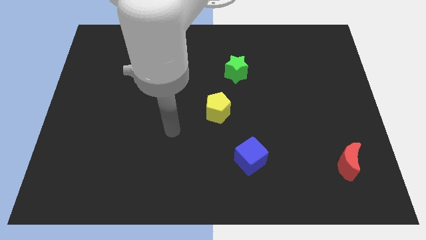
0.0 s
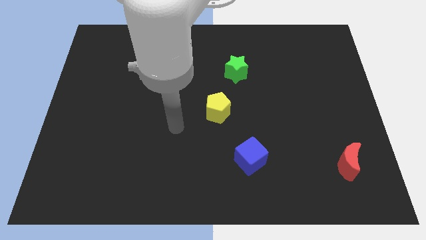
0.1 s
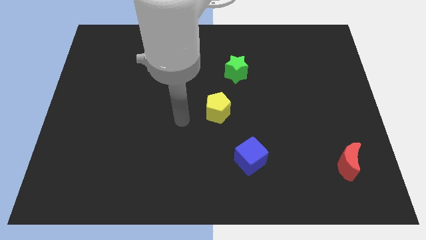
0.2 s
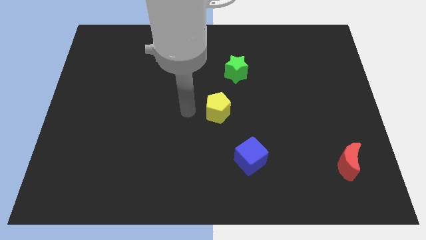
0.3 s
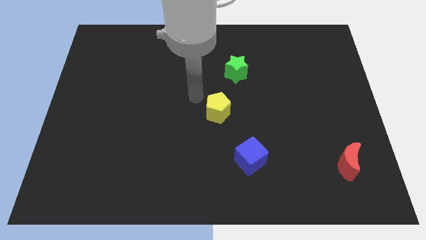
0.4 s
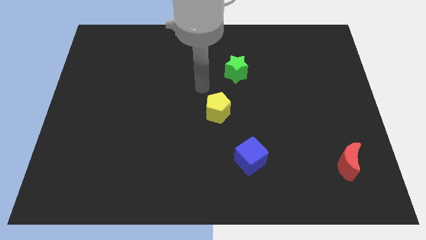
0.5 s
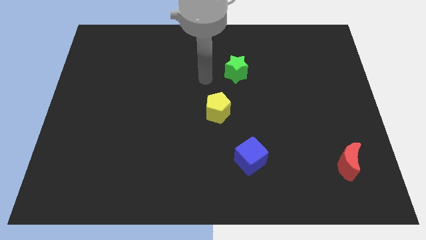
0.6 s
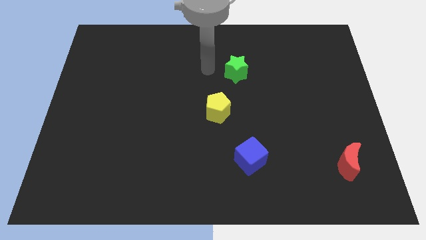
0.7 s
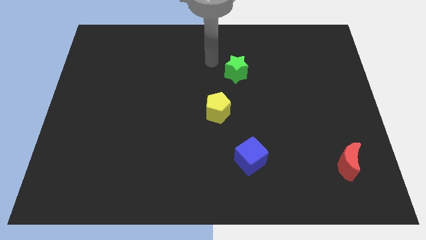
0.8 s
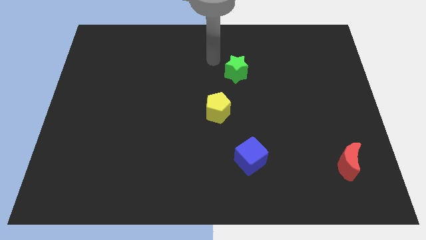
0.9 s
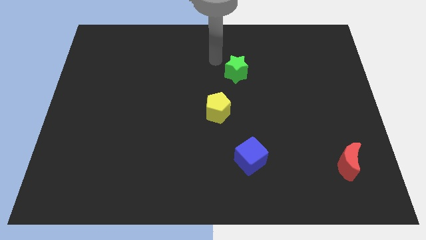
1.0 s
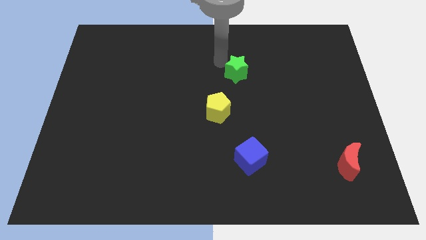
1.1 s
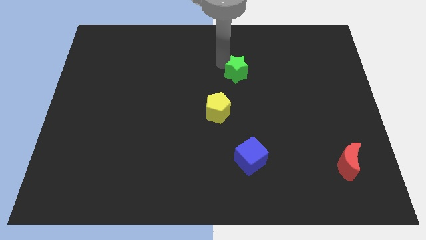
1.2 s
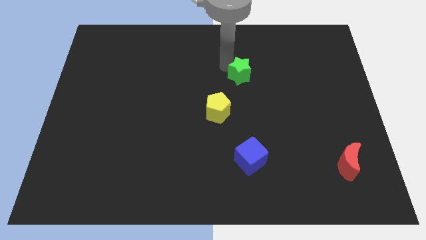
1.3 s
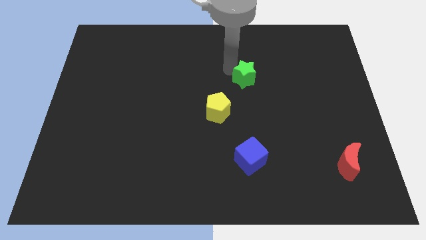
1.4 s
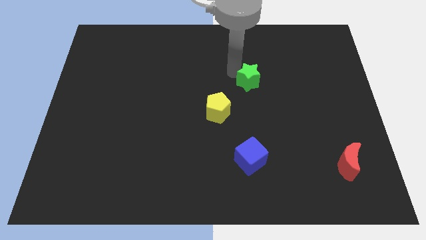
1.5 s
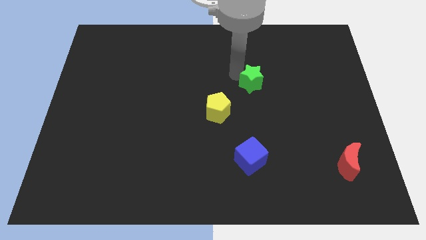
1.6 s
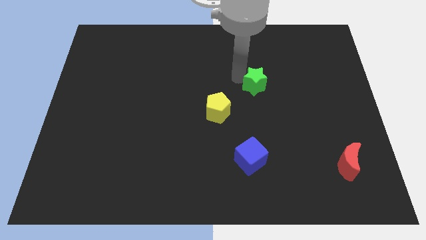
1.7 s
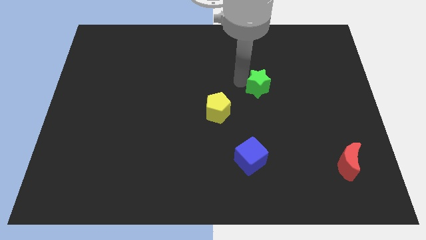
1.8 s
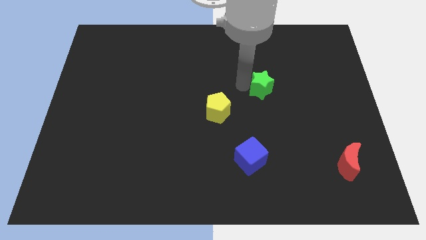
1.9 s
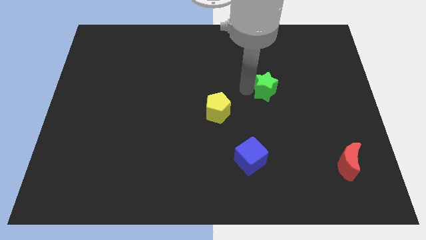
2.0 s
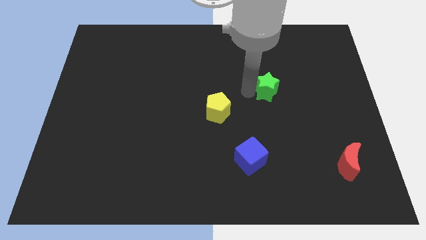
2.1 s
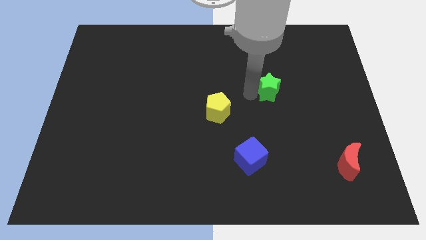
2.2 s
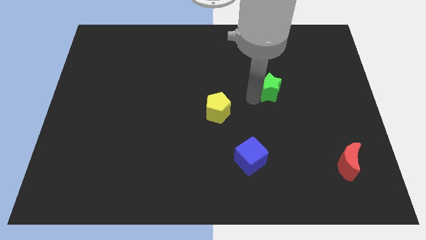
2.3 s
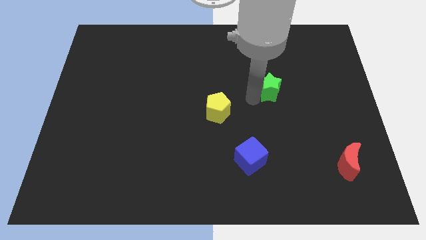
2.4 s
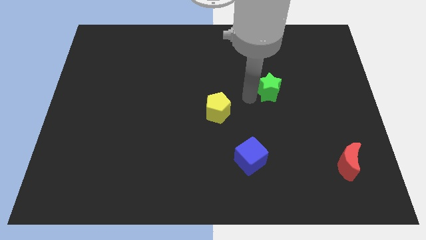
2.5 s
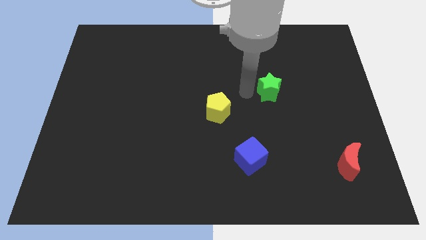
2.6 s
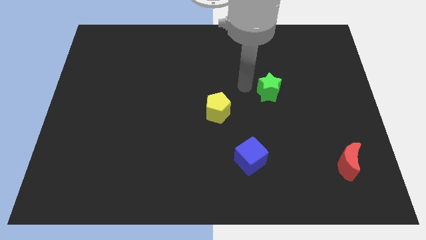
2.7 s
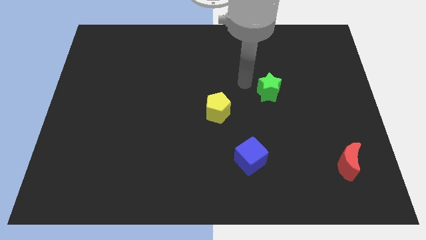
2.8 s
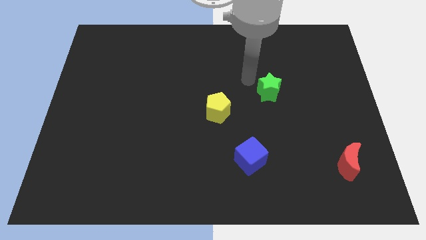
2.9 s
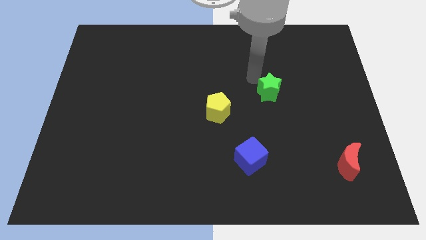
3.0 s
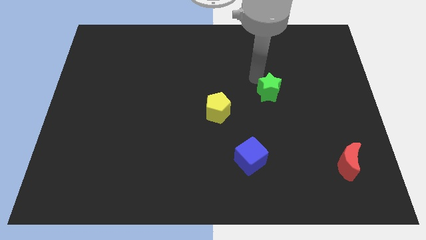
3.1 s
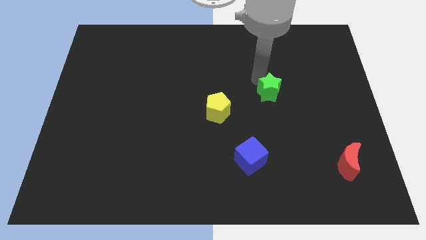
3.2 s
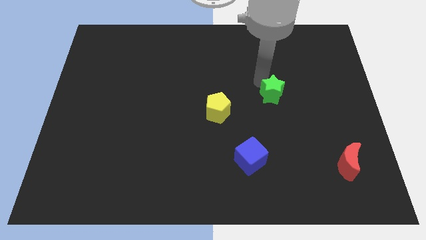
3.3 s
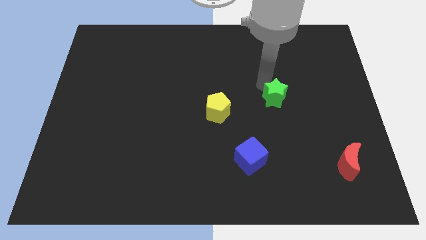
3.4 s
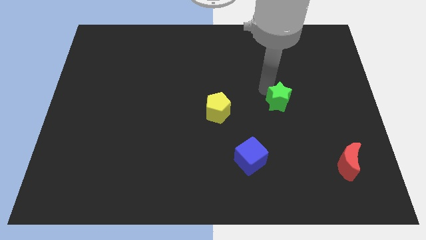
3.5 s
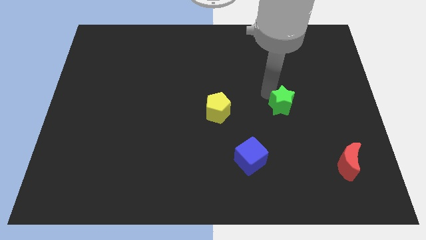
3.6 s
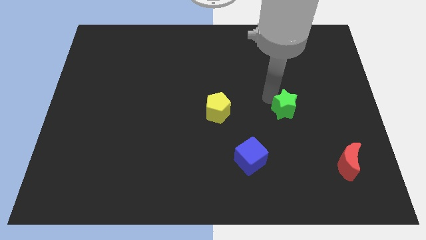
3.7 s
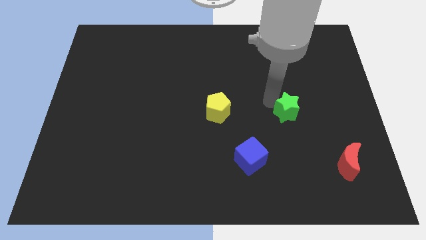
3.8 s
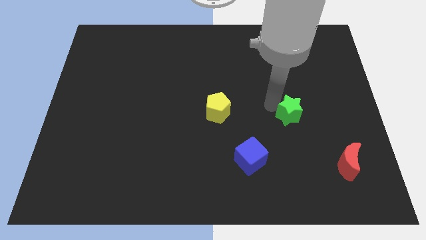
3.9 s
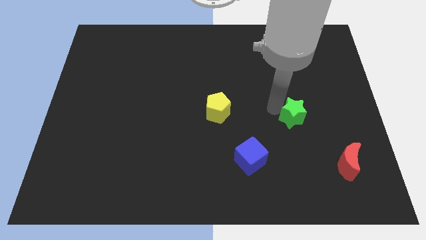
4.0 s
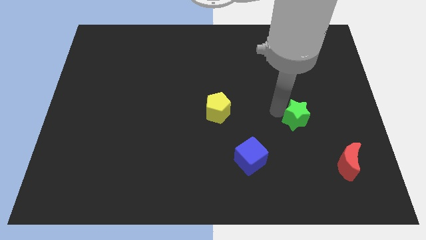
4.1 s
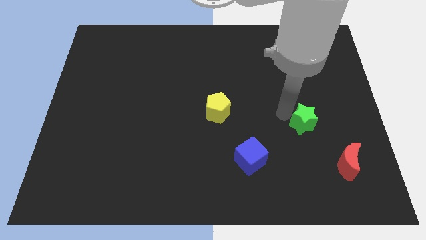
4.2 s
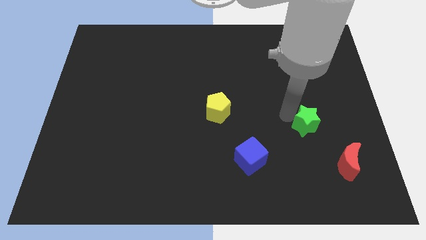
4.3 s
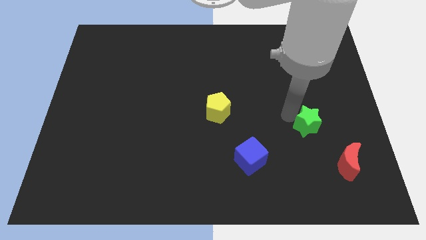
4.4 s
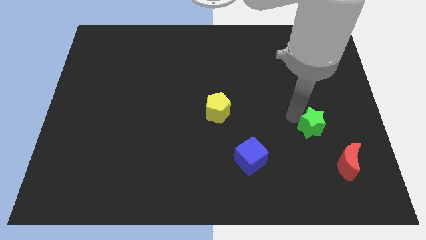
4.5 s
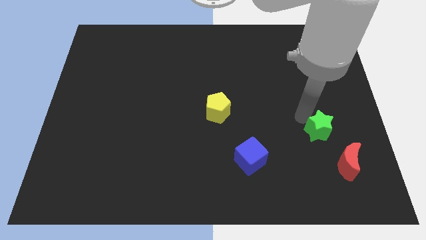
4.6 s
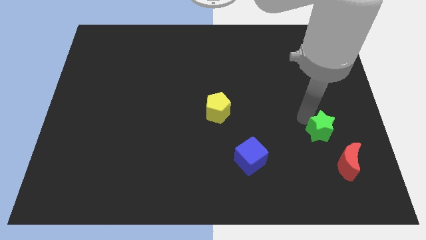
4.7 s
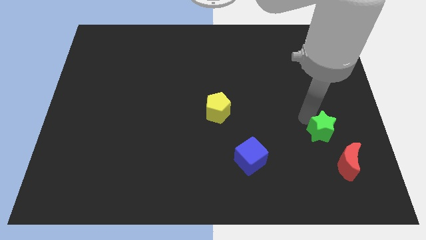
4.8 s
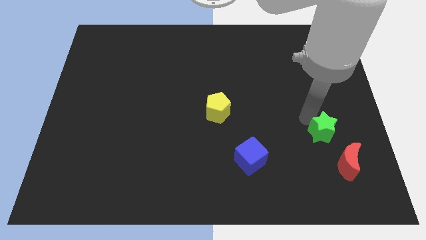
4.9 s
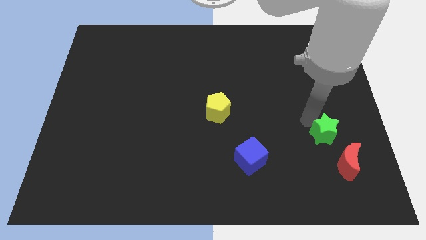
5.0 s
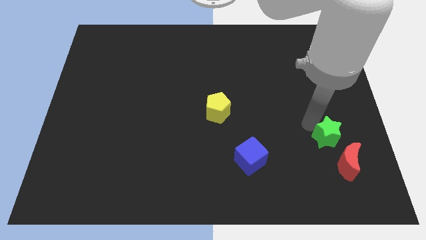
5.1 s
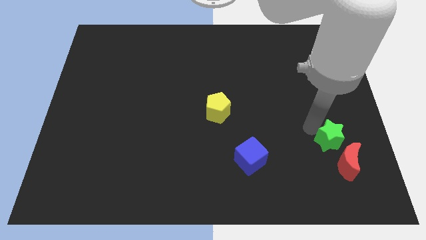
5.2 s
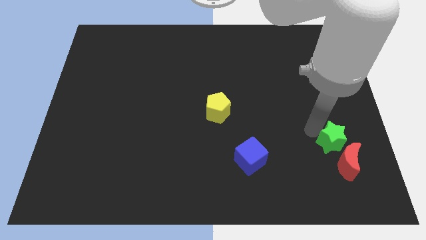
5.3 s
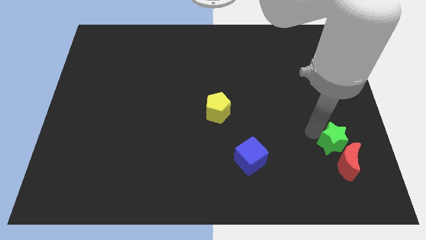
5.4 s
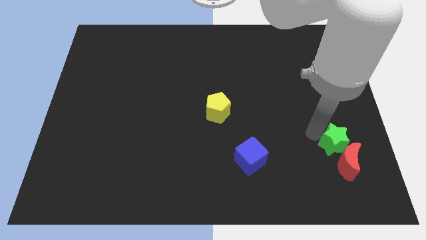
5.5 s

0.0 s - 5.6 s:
slide the green star next to the red block

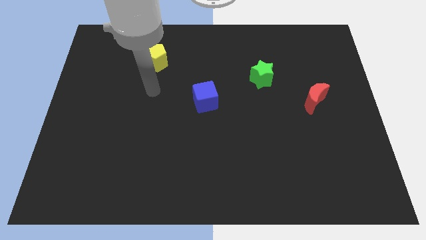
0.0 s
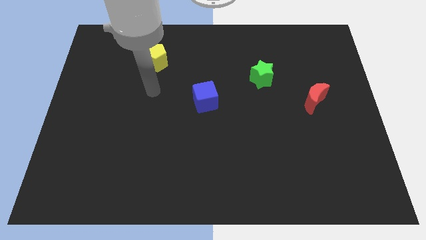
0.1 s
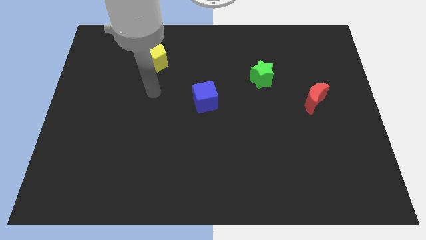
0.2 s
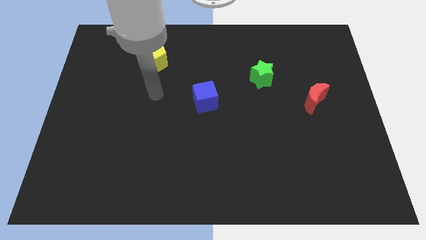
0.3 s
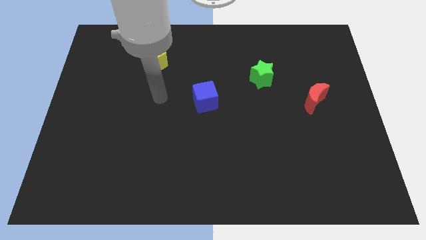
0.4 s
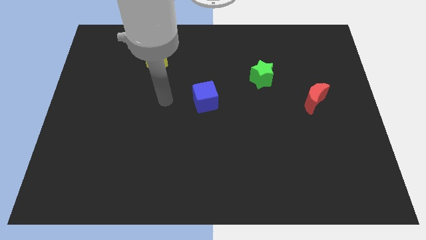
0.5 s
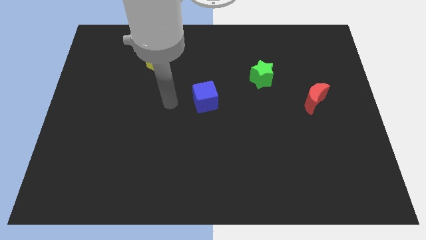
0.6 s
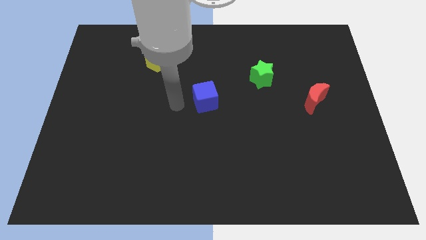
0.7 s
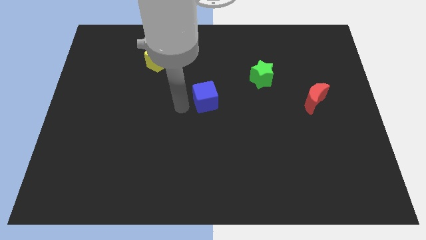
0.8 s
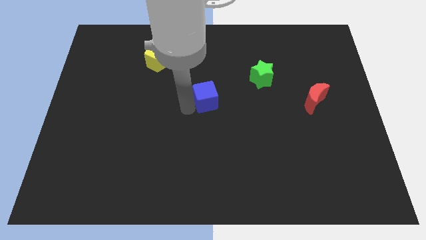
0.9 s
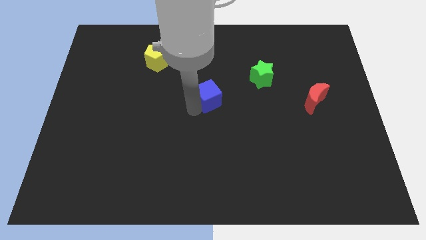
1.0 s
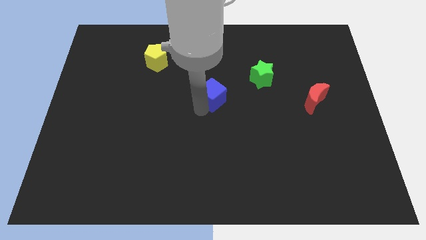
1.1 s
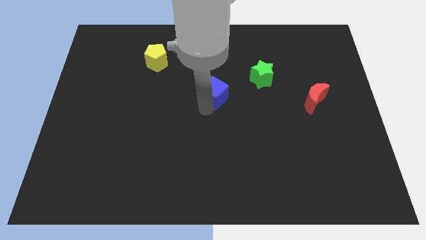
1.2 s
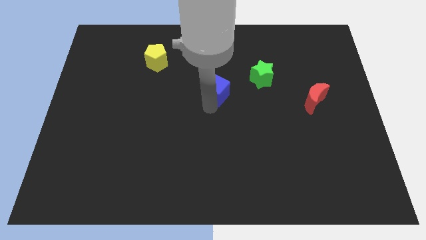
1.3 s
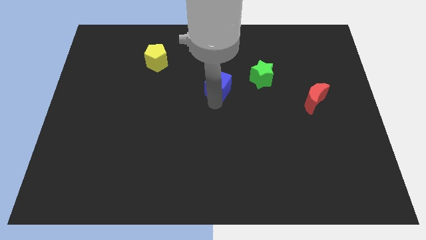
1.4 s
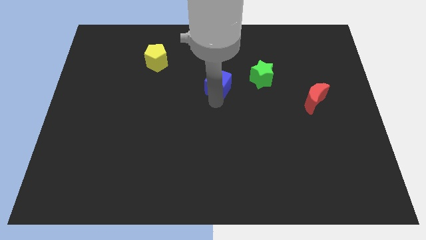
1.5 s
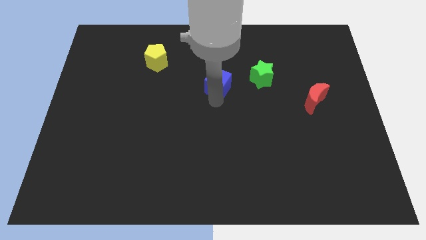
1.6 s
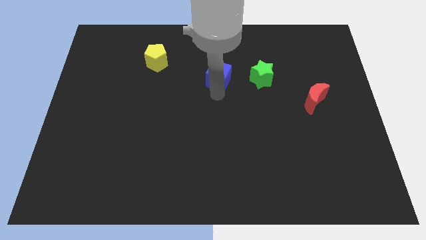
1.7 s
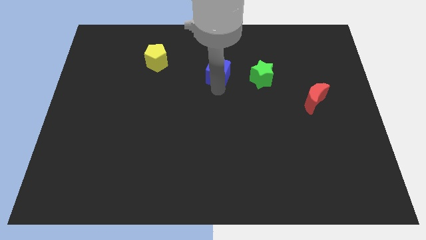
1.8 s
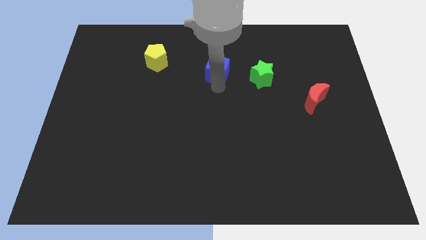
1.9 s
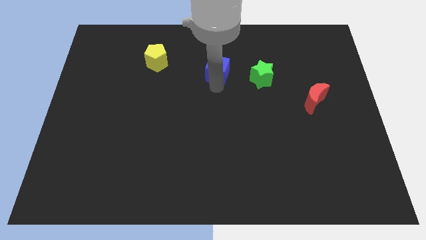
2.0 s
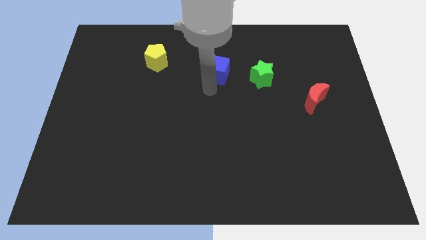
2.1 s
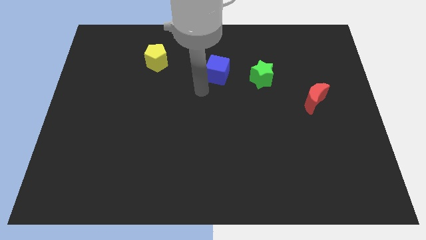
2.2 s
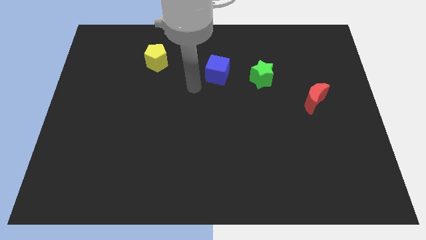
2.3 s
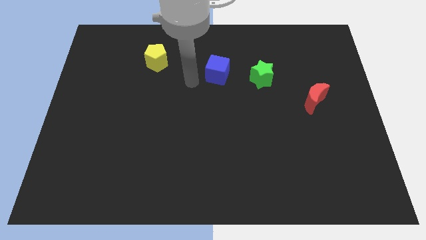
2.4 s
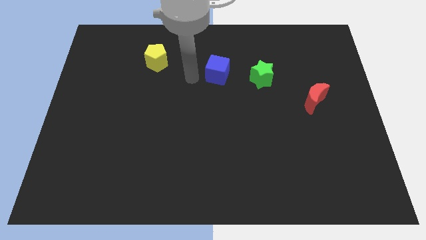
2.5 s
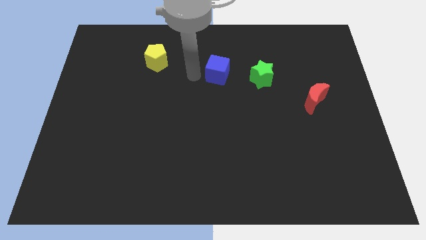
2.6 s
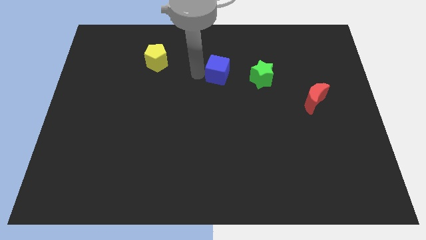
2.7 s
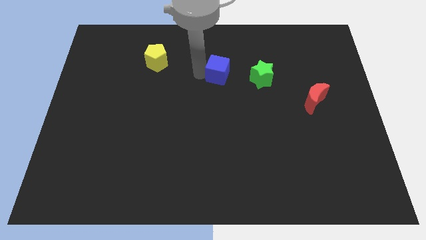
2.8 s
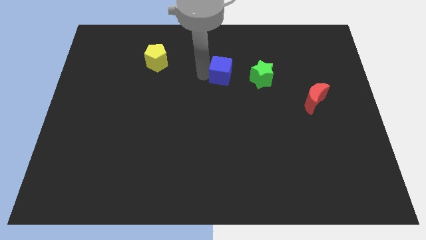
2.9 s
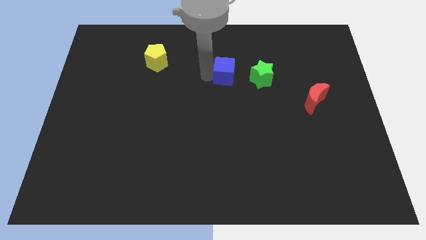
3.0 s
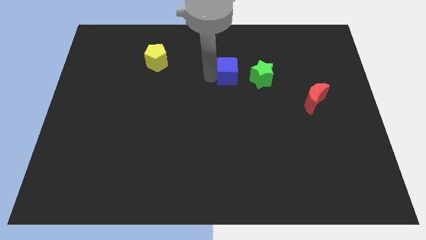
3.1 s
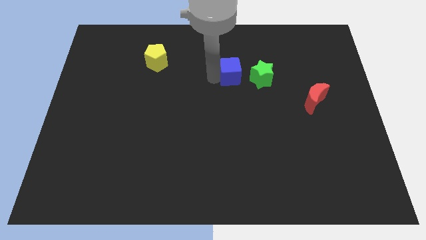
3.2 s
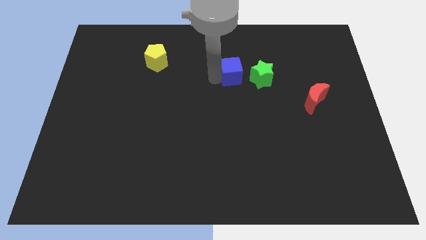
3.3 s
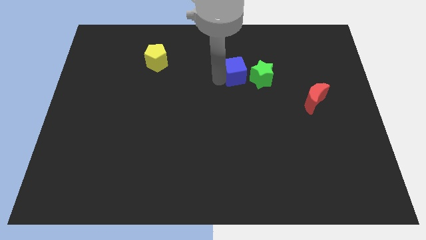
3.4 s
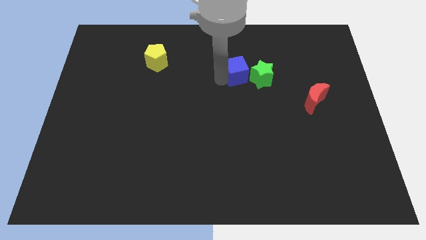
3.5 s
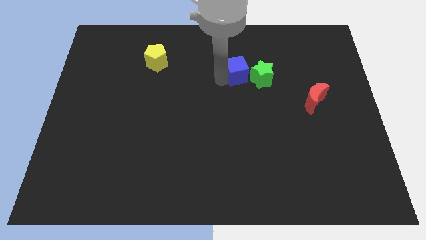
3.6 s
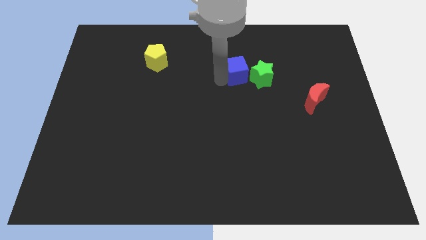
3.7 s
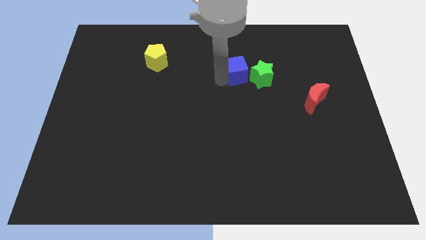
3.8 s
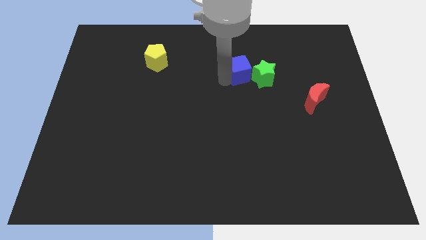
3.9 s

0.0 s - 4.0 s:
slide the blue block next to the green star
